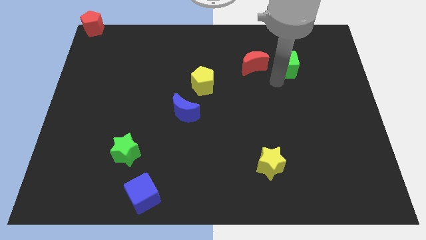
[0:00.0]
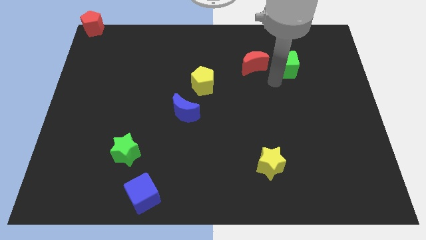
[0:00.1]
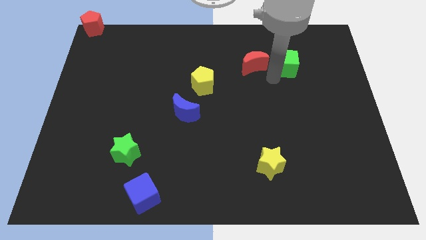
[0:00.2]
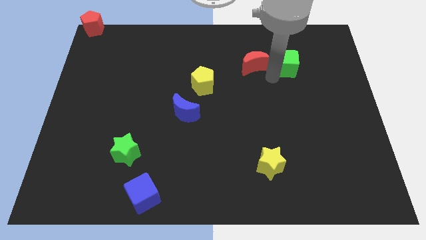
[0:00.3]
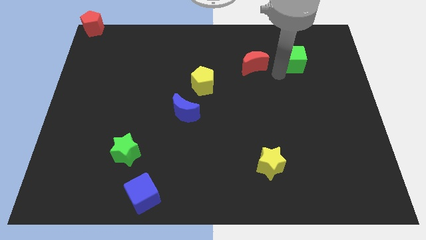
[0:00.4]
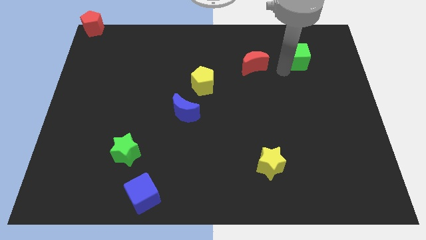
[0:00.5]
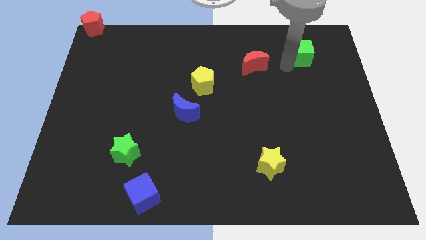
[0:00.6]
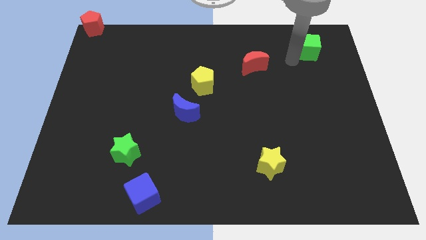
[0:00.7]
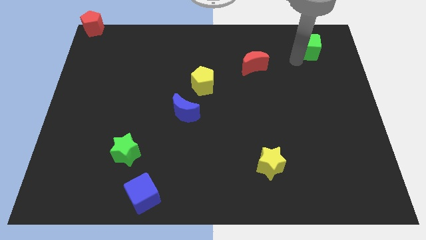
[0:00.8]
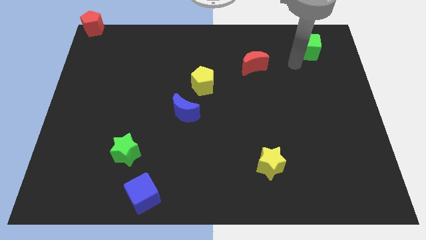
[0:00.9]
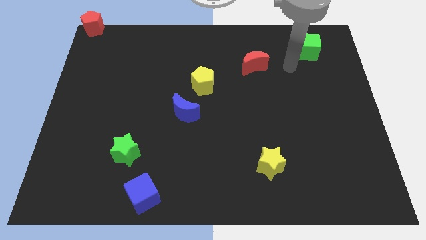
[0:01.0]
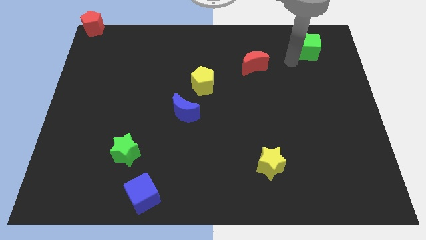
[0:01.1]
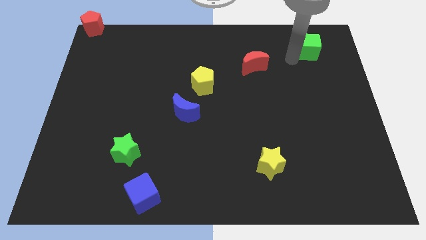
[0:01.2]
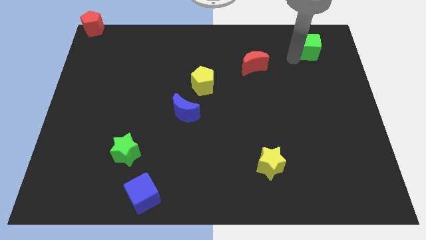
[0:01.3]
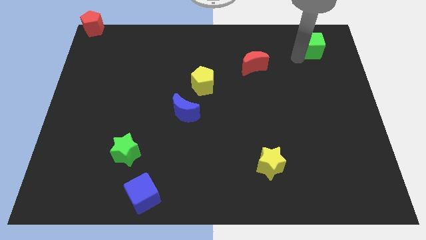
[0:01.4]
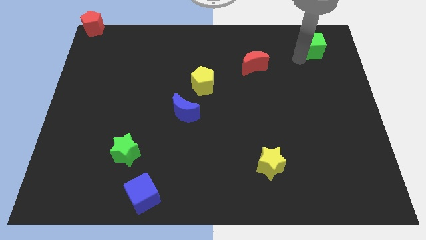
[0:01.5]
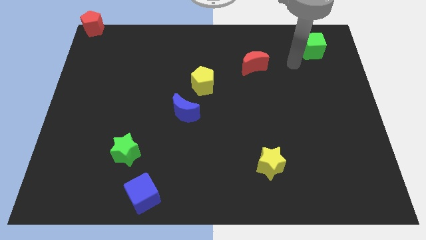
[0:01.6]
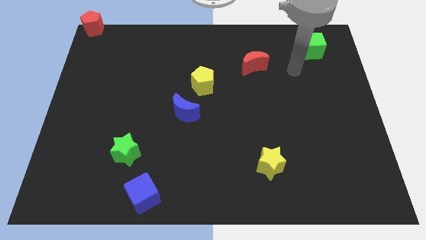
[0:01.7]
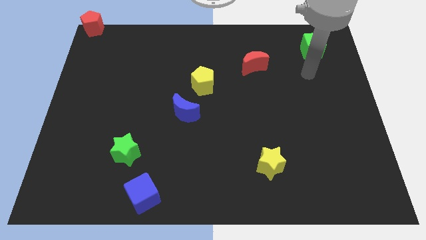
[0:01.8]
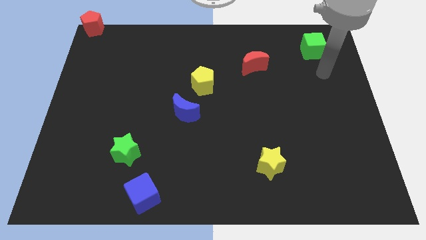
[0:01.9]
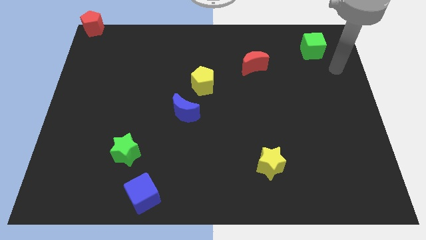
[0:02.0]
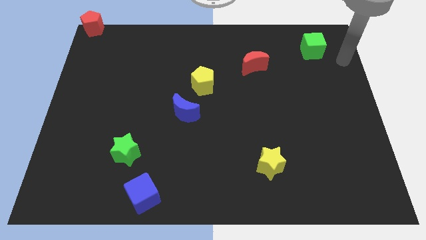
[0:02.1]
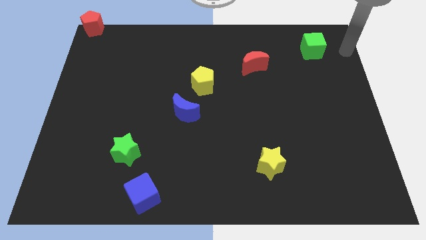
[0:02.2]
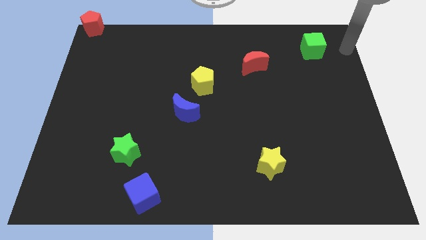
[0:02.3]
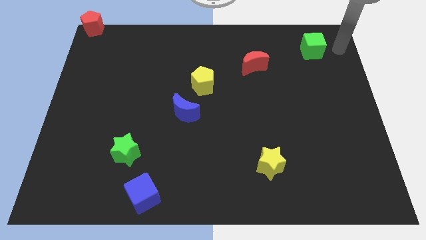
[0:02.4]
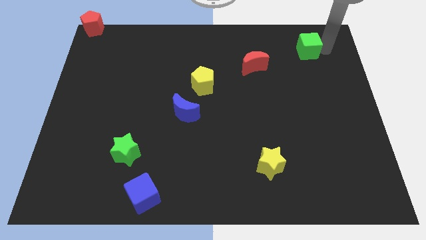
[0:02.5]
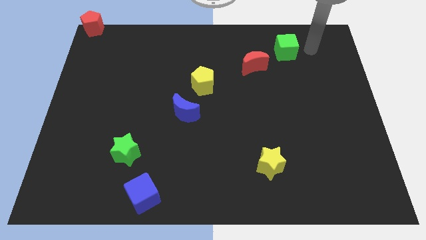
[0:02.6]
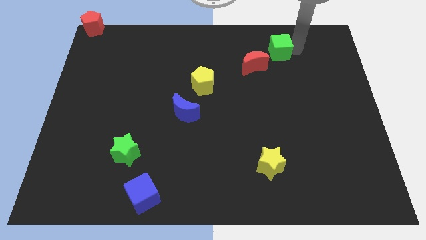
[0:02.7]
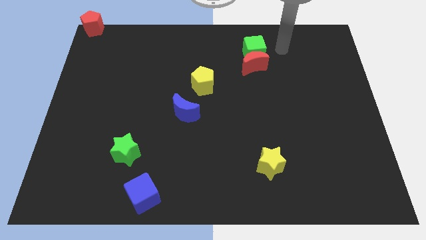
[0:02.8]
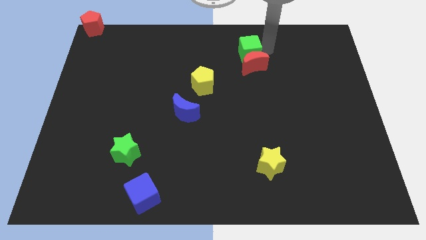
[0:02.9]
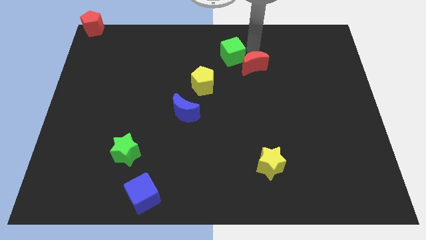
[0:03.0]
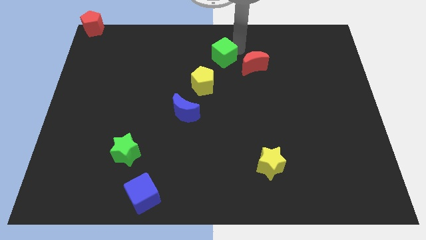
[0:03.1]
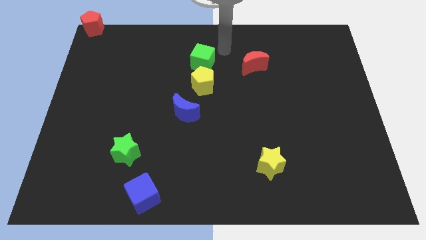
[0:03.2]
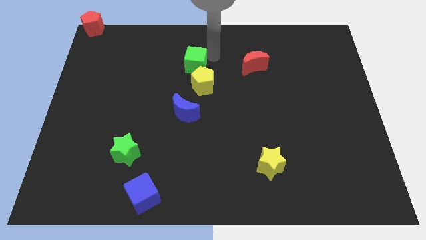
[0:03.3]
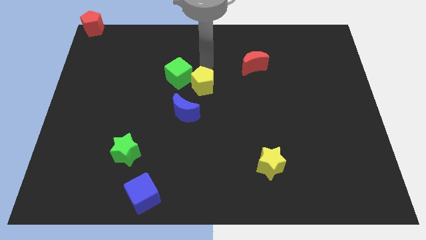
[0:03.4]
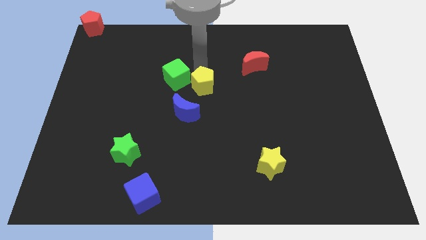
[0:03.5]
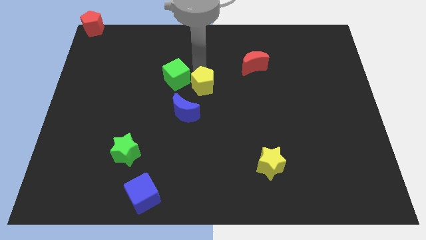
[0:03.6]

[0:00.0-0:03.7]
move the green cube to the left of the yellow pentagon

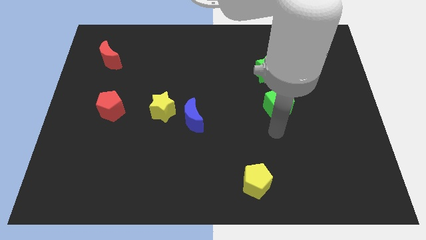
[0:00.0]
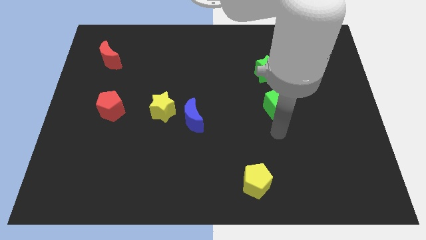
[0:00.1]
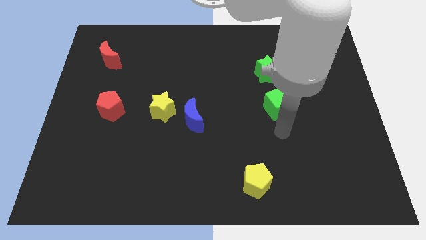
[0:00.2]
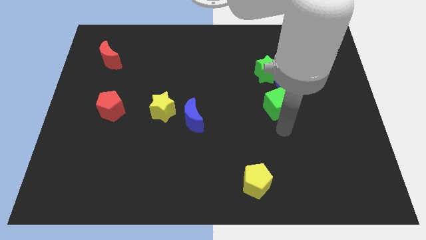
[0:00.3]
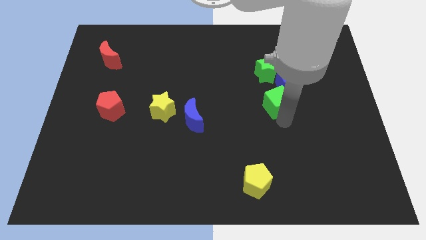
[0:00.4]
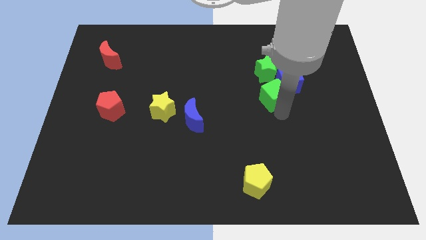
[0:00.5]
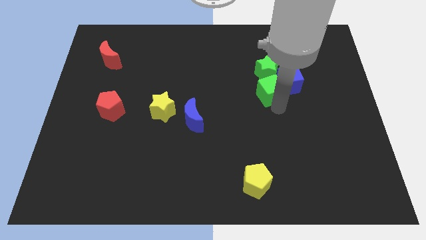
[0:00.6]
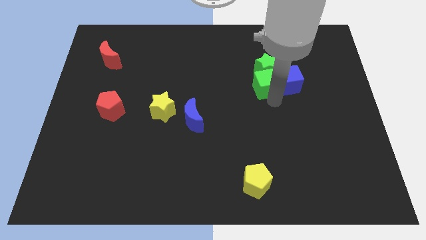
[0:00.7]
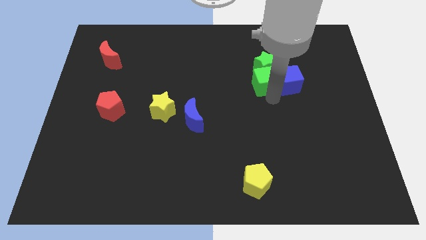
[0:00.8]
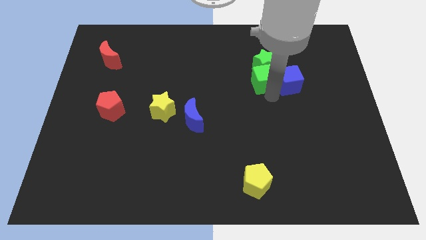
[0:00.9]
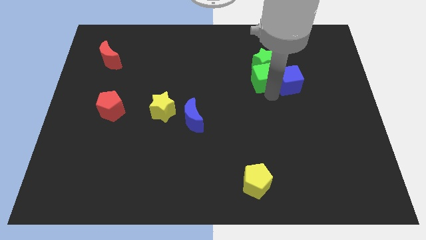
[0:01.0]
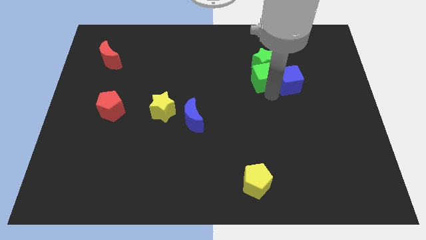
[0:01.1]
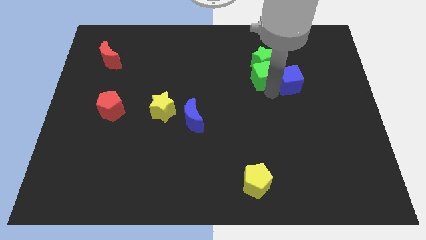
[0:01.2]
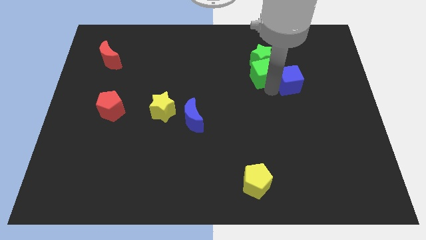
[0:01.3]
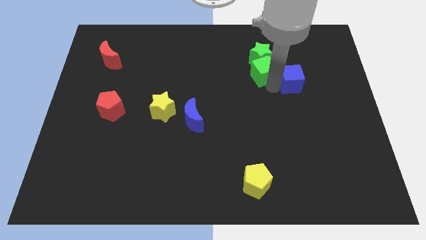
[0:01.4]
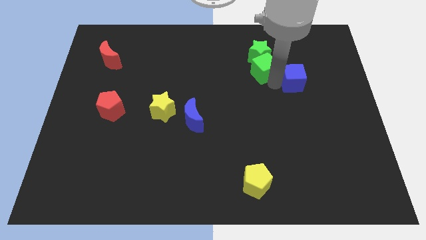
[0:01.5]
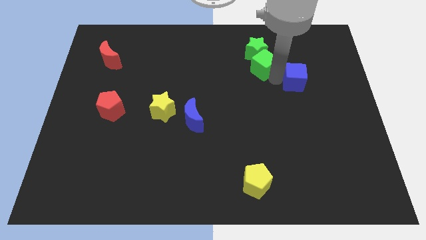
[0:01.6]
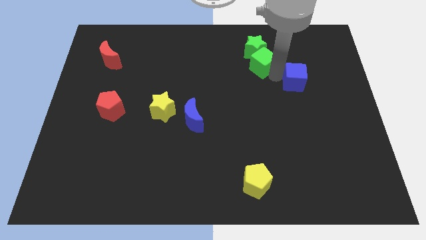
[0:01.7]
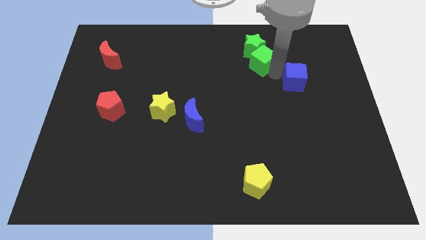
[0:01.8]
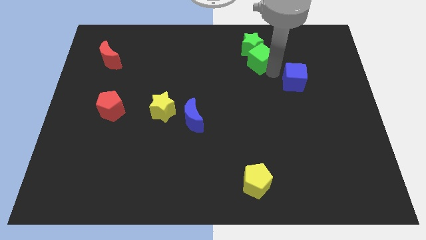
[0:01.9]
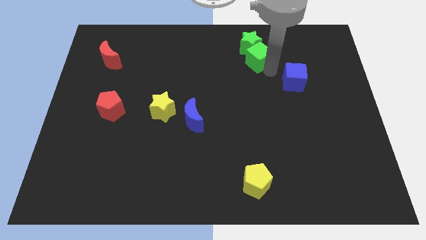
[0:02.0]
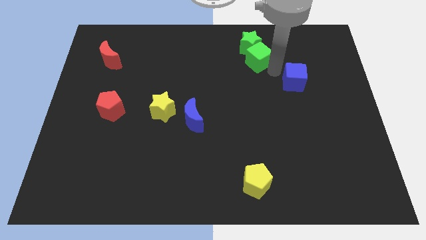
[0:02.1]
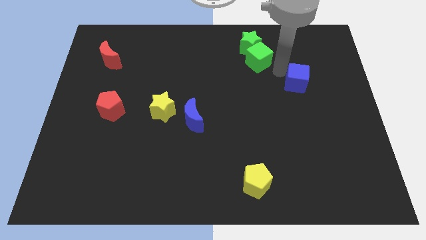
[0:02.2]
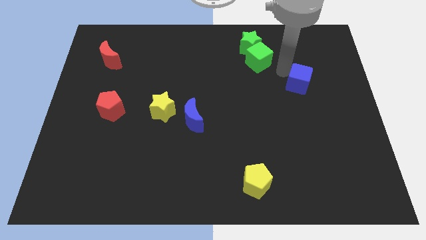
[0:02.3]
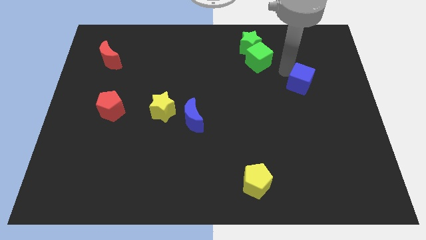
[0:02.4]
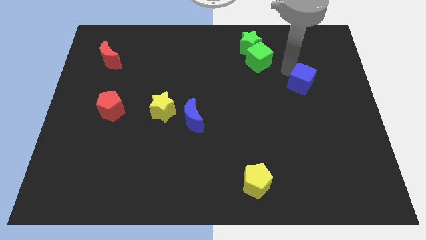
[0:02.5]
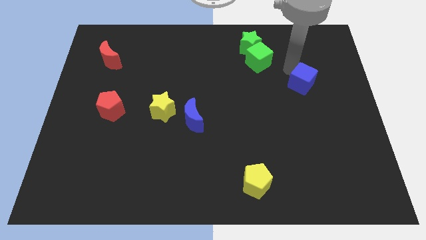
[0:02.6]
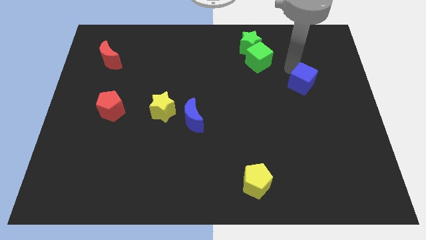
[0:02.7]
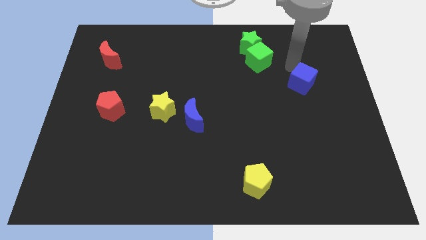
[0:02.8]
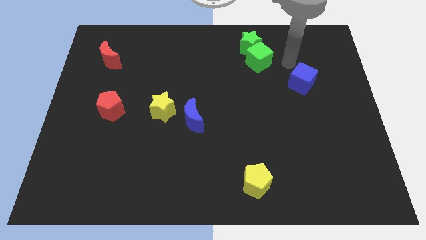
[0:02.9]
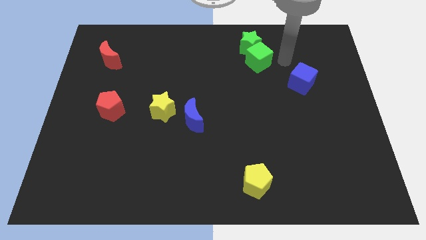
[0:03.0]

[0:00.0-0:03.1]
push the green cube into the green star

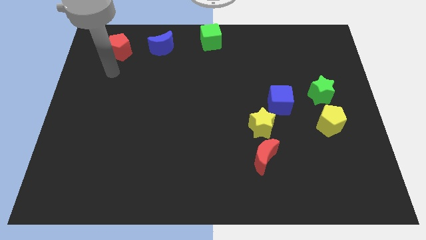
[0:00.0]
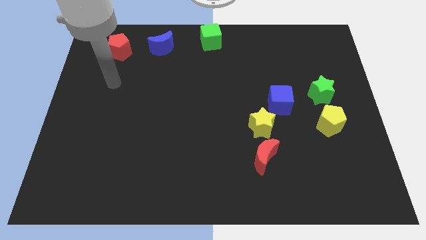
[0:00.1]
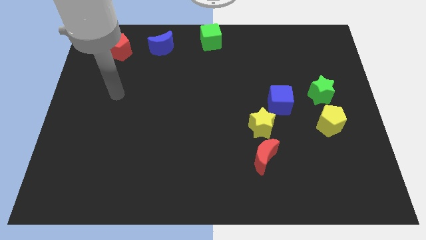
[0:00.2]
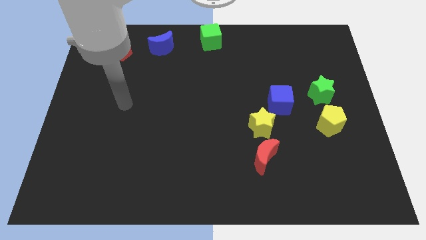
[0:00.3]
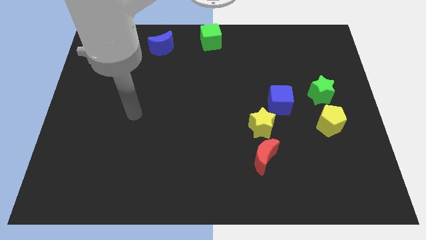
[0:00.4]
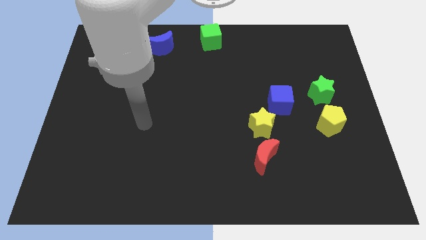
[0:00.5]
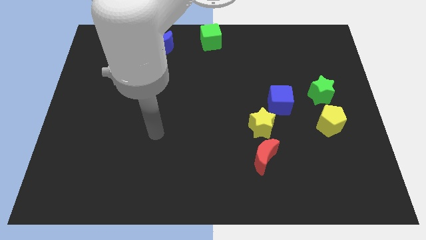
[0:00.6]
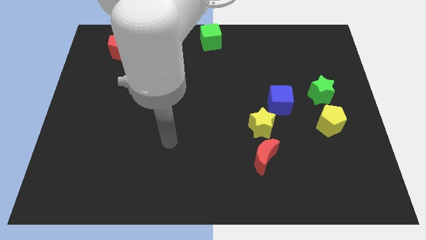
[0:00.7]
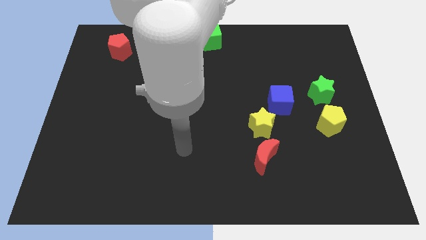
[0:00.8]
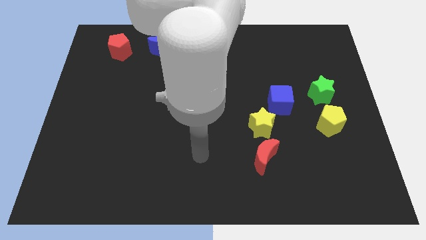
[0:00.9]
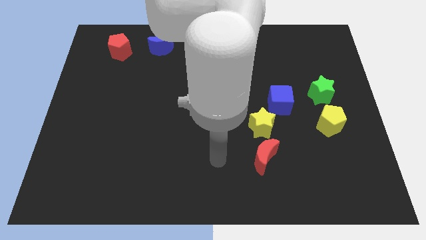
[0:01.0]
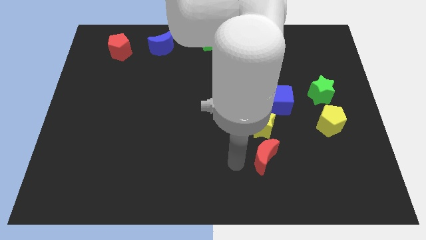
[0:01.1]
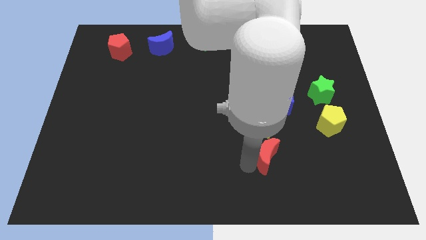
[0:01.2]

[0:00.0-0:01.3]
point your hand to the left of the red crescent

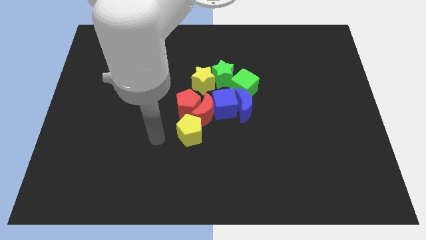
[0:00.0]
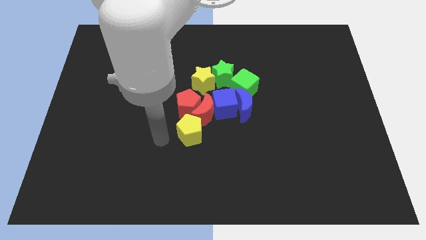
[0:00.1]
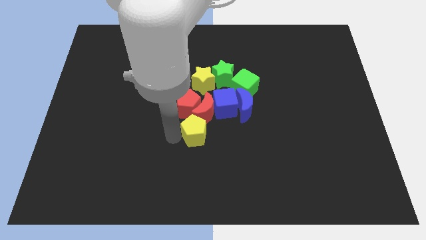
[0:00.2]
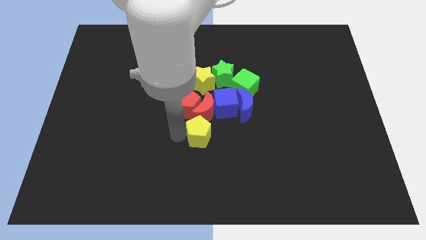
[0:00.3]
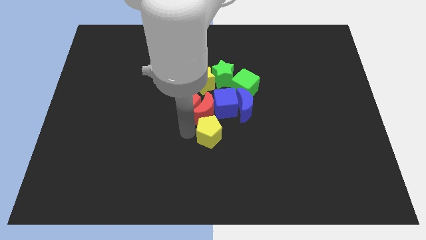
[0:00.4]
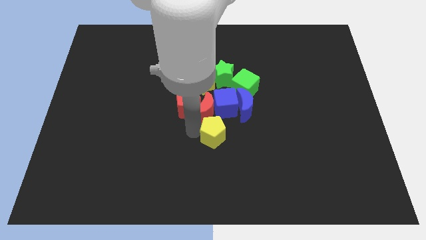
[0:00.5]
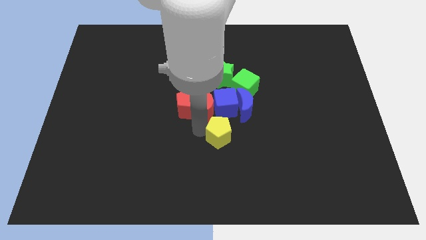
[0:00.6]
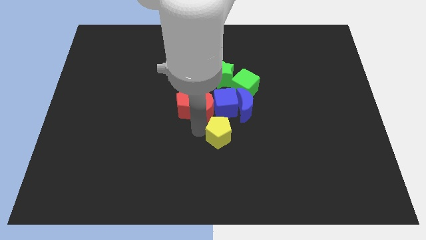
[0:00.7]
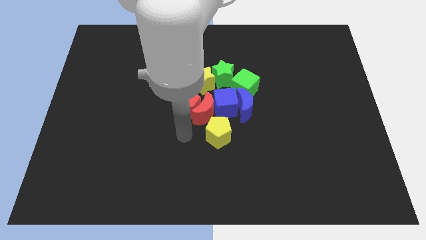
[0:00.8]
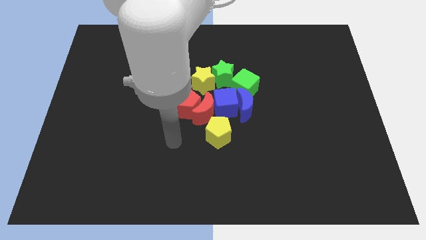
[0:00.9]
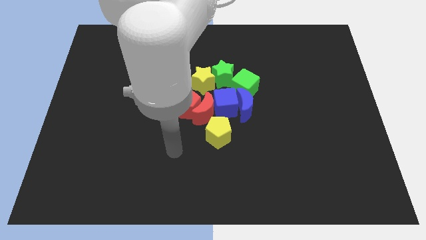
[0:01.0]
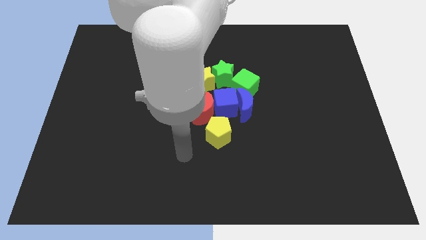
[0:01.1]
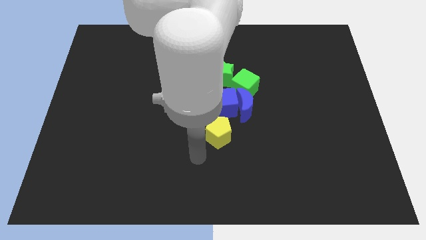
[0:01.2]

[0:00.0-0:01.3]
push the yellow pentagon slightly to the right
